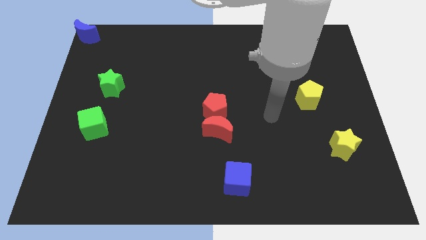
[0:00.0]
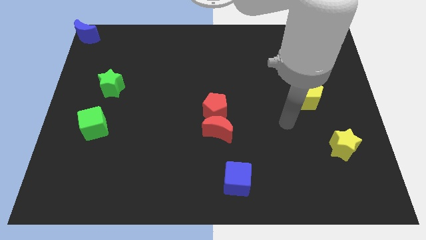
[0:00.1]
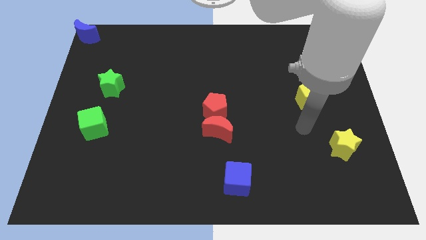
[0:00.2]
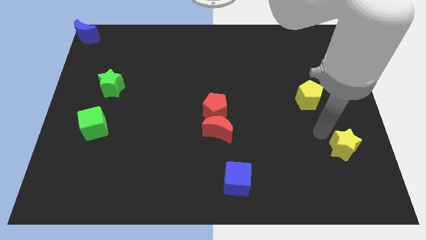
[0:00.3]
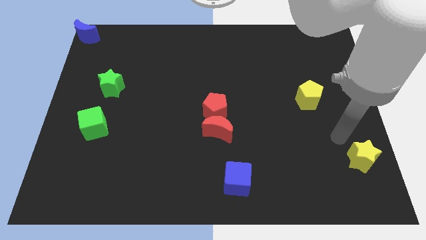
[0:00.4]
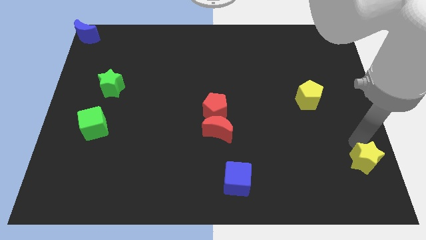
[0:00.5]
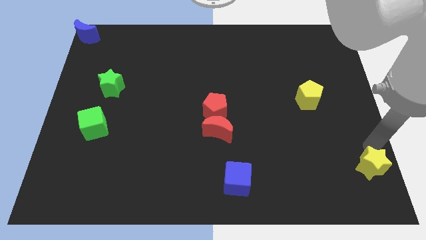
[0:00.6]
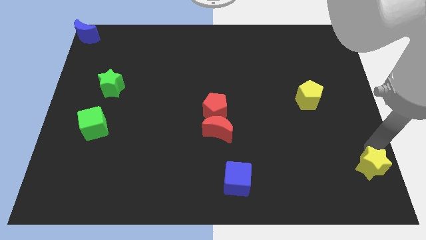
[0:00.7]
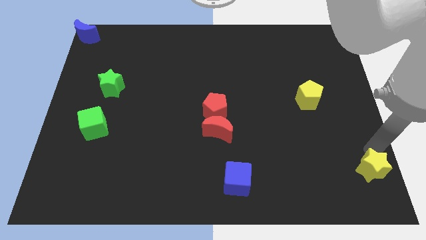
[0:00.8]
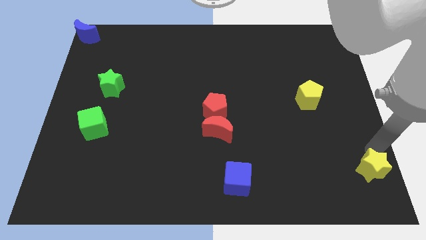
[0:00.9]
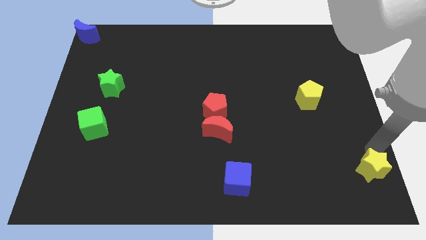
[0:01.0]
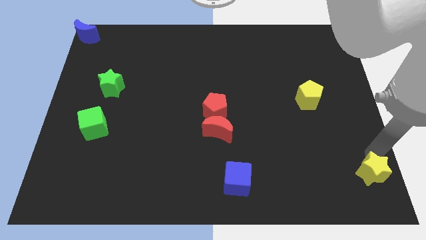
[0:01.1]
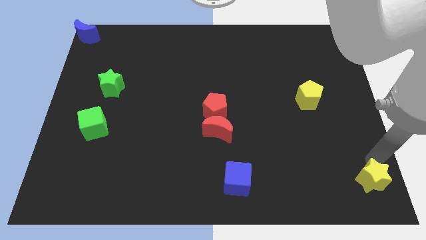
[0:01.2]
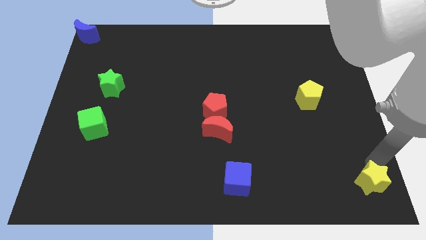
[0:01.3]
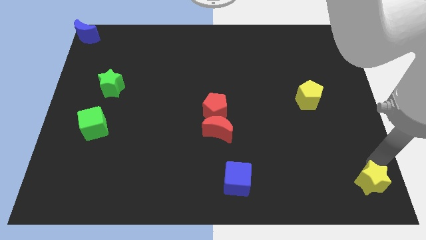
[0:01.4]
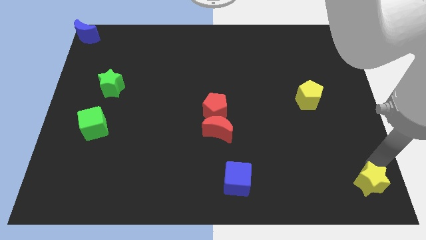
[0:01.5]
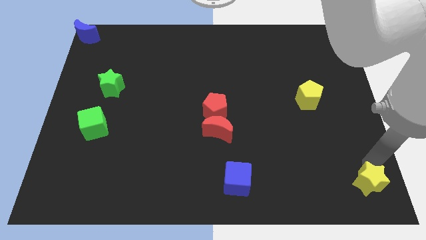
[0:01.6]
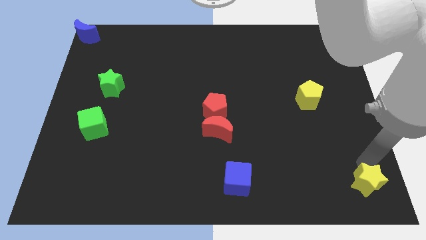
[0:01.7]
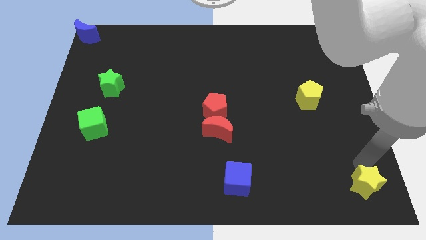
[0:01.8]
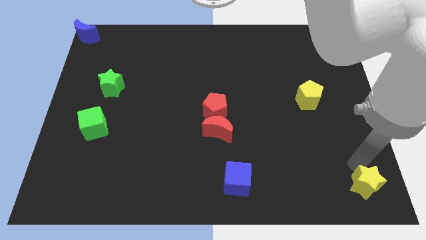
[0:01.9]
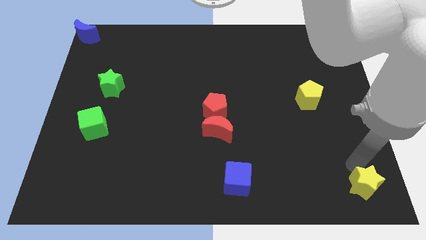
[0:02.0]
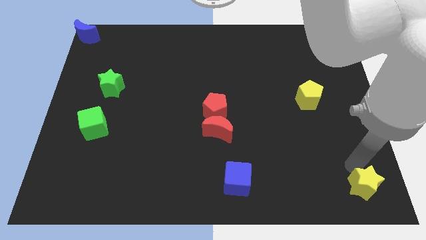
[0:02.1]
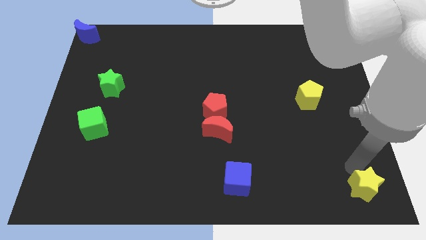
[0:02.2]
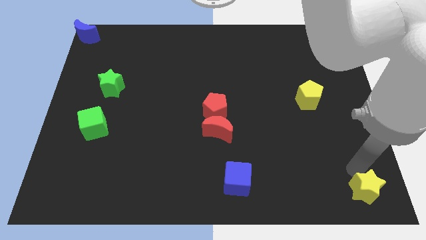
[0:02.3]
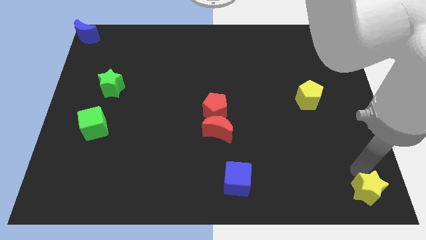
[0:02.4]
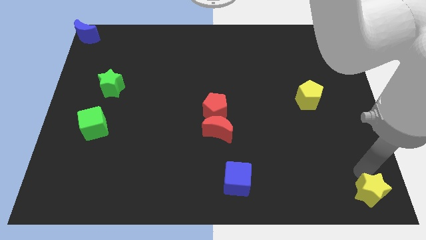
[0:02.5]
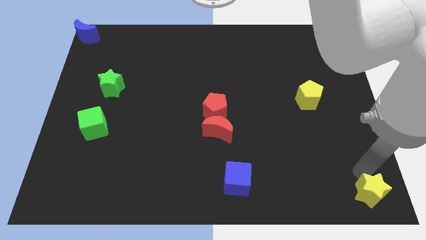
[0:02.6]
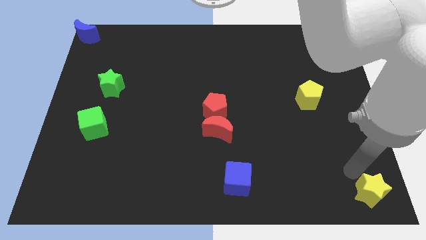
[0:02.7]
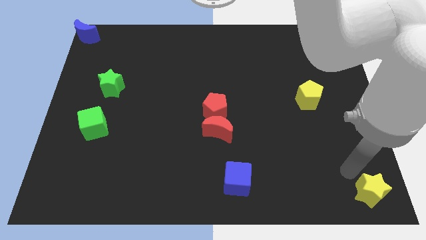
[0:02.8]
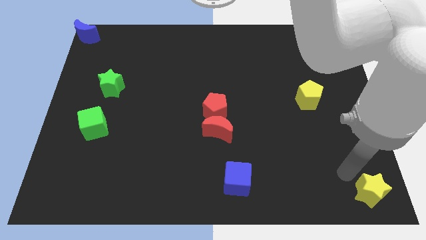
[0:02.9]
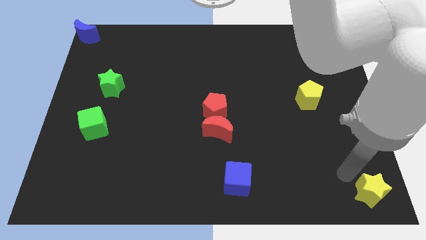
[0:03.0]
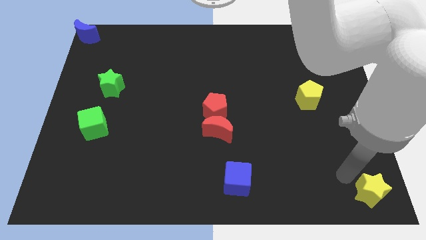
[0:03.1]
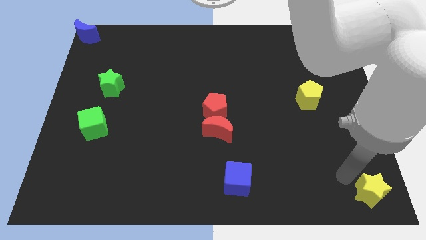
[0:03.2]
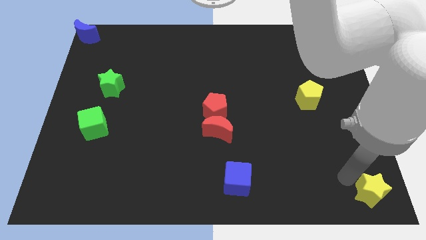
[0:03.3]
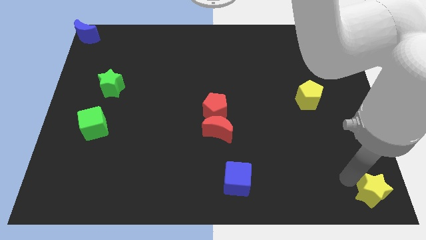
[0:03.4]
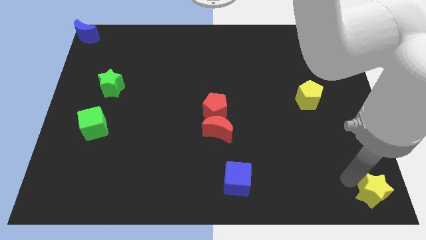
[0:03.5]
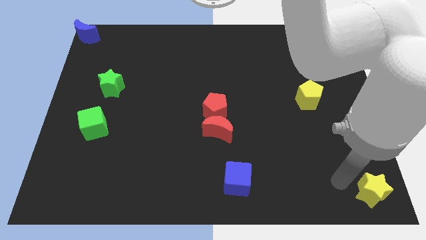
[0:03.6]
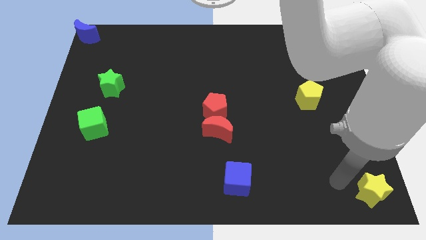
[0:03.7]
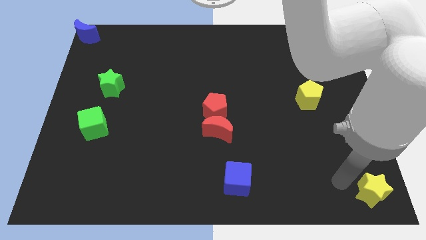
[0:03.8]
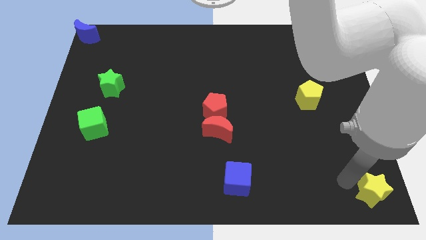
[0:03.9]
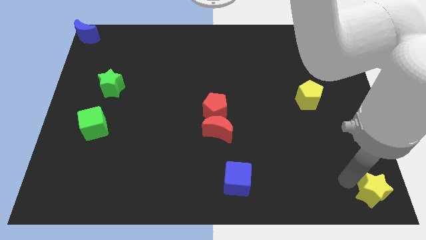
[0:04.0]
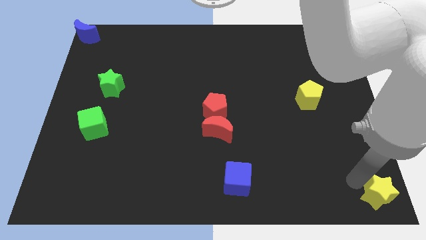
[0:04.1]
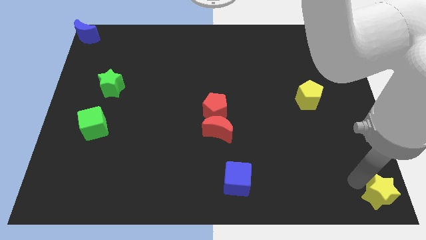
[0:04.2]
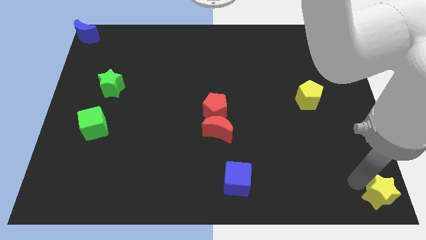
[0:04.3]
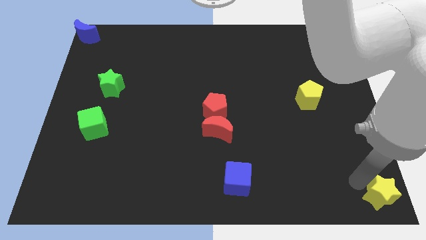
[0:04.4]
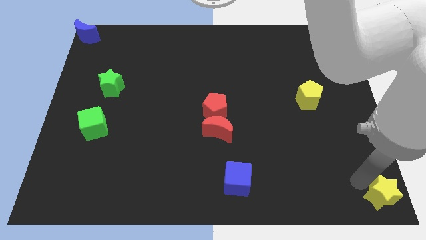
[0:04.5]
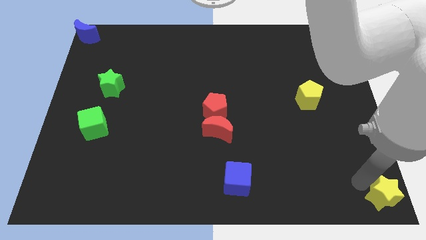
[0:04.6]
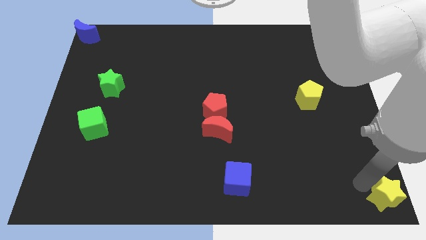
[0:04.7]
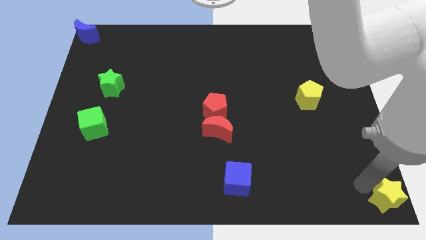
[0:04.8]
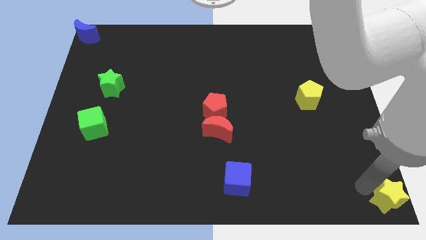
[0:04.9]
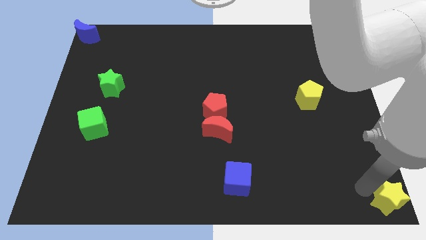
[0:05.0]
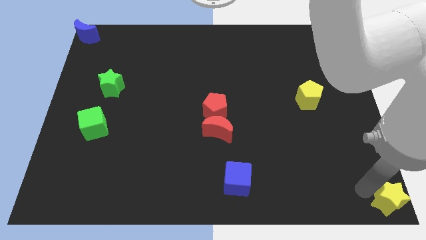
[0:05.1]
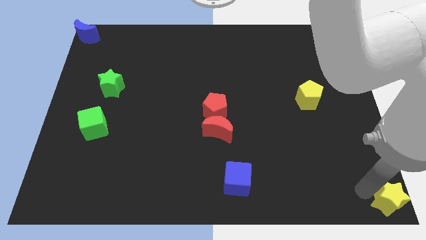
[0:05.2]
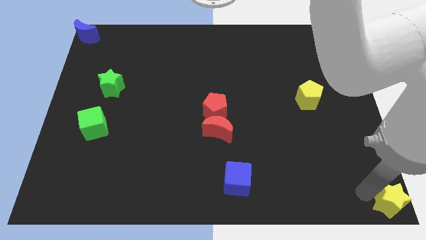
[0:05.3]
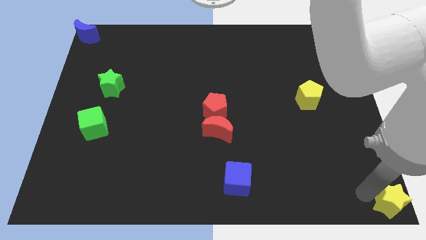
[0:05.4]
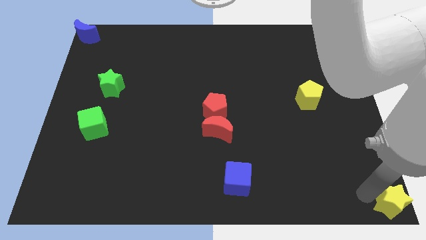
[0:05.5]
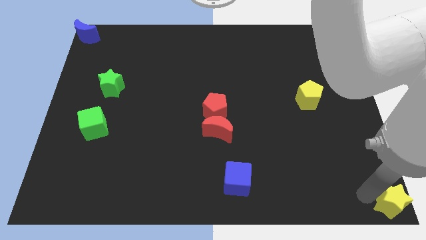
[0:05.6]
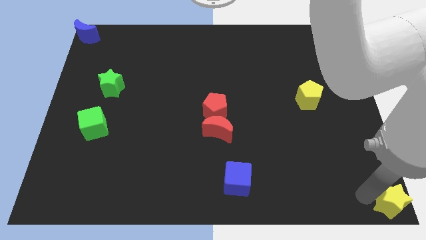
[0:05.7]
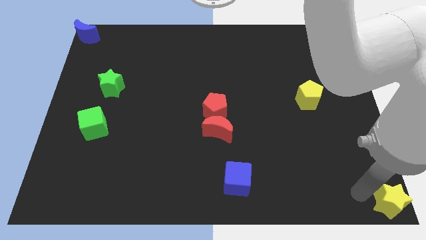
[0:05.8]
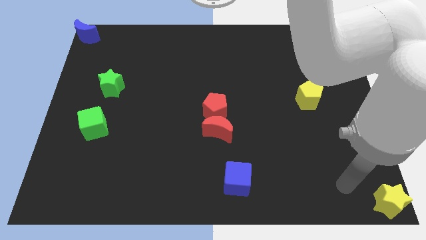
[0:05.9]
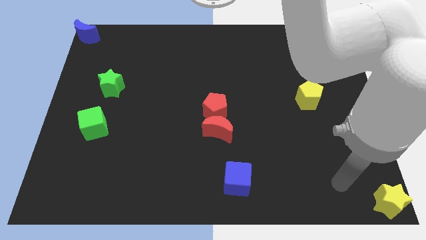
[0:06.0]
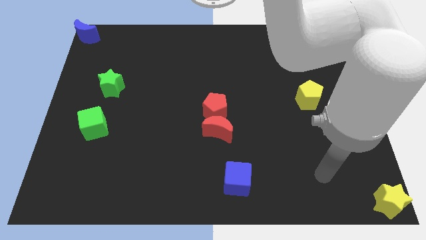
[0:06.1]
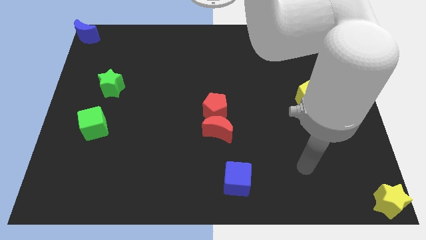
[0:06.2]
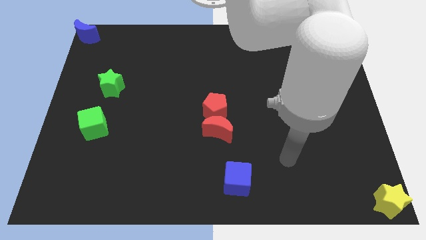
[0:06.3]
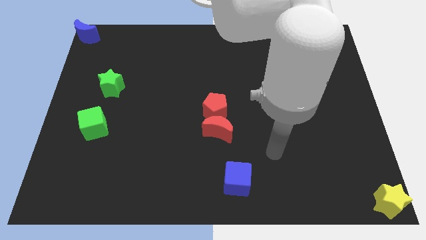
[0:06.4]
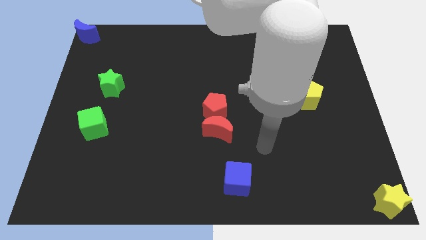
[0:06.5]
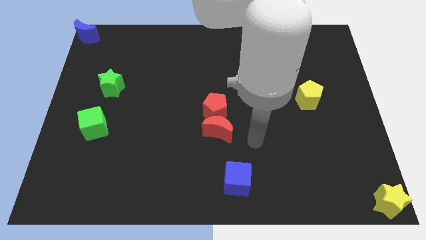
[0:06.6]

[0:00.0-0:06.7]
place the yellow star at the bottom right corner of the board

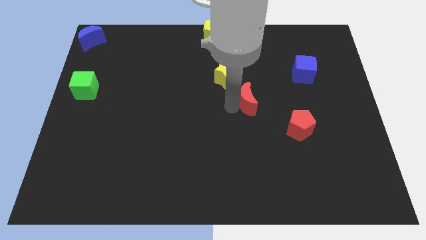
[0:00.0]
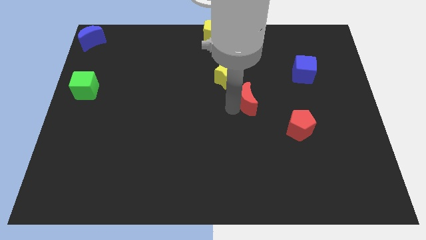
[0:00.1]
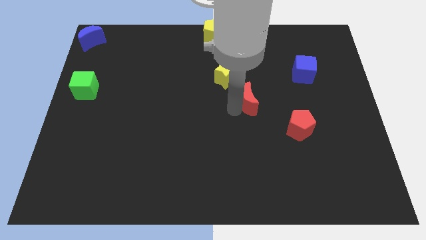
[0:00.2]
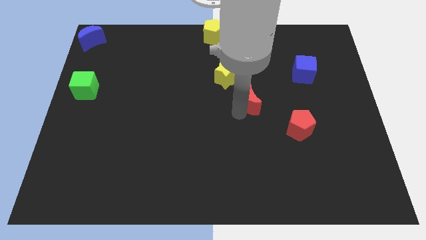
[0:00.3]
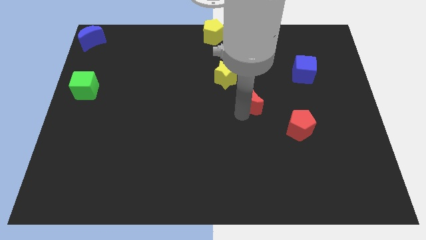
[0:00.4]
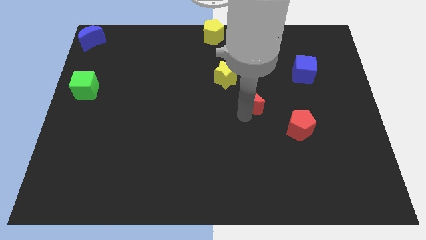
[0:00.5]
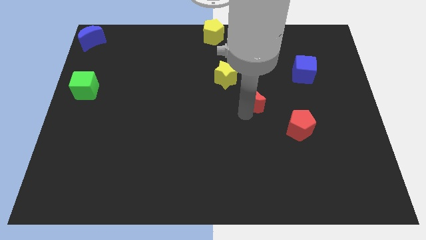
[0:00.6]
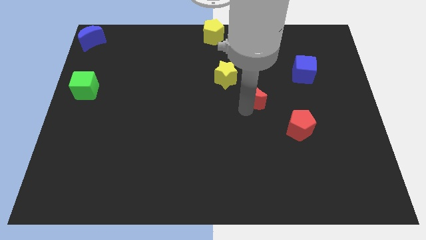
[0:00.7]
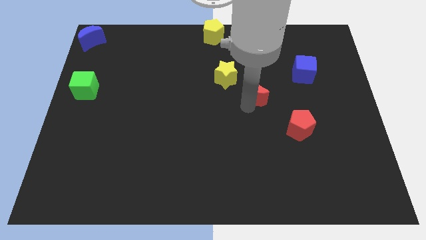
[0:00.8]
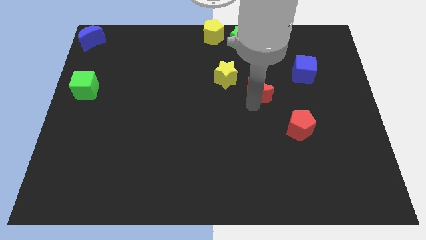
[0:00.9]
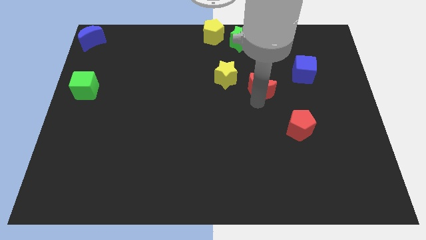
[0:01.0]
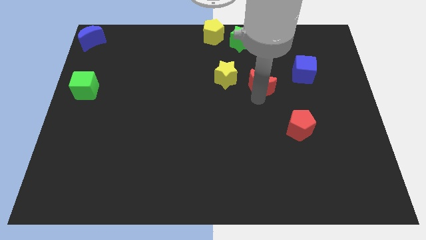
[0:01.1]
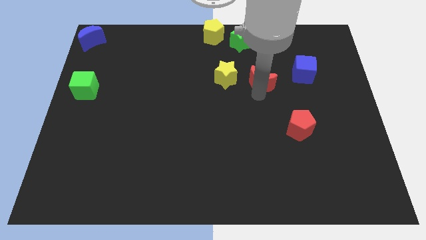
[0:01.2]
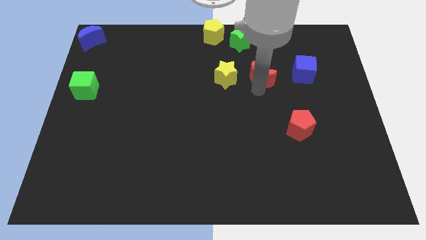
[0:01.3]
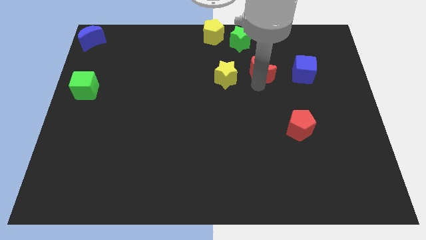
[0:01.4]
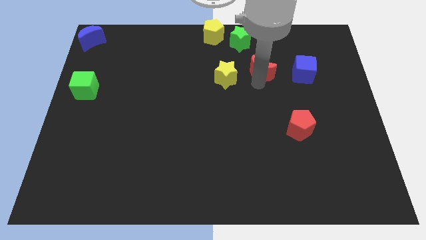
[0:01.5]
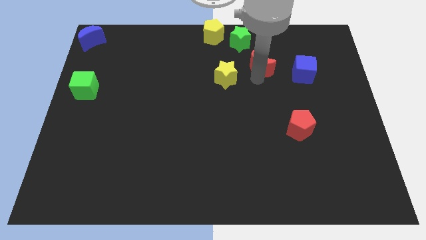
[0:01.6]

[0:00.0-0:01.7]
push the red crescent to the left side of the blue cube

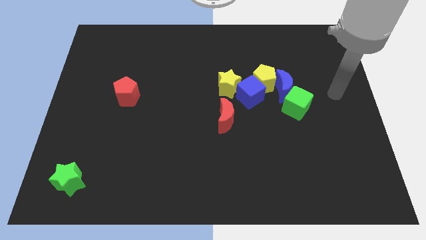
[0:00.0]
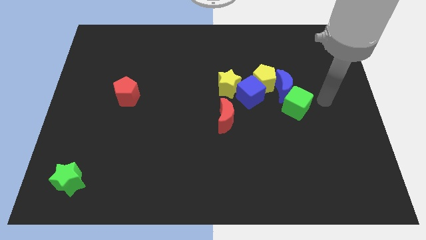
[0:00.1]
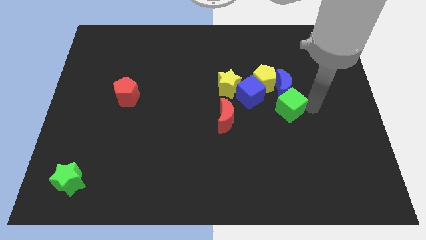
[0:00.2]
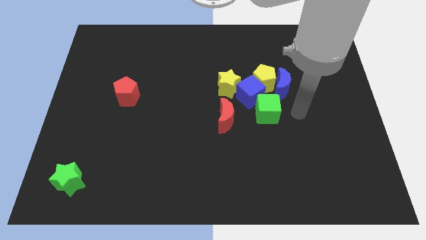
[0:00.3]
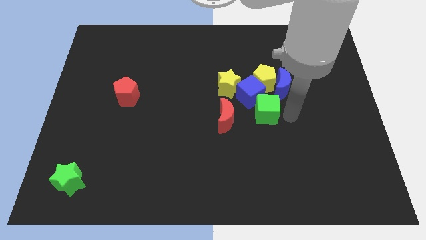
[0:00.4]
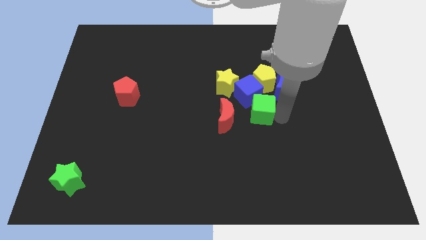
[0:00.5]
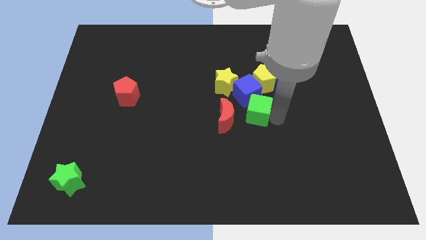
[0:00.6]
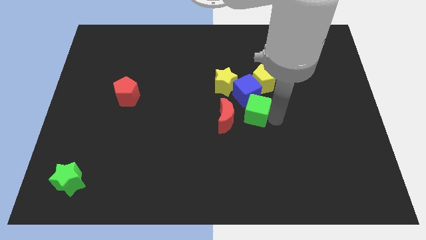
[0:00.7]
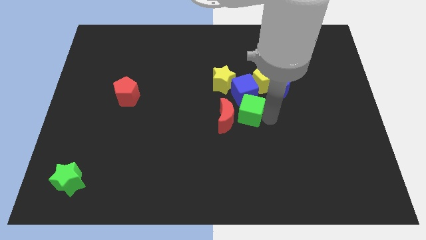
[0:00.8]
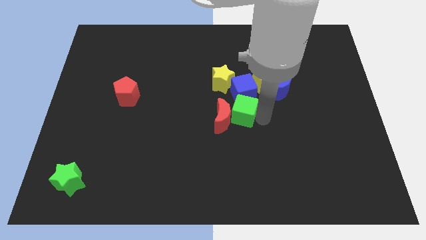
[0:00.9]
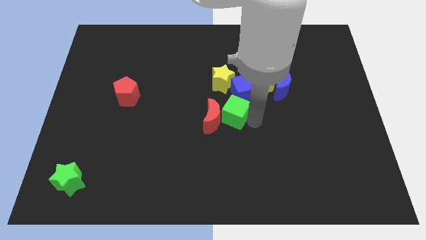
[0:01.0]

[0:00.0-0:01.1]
move green cube right beside the red moon
